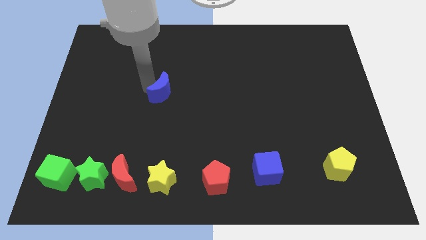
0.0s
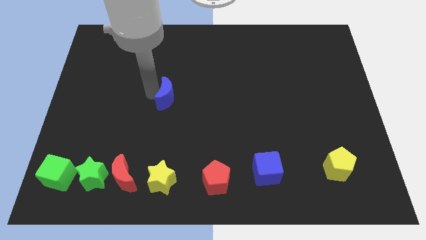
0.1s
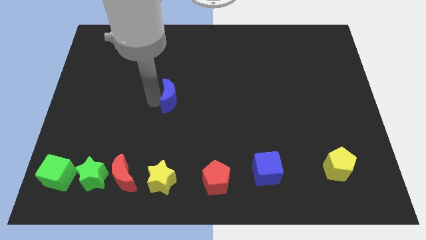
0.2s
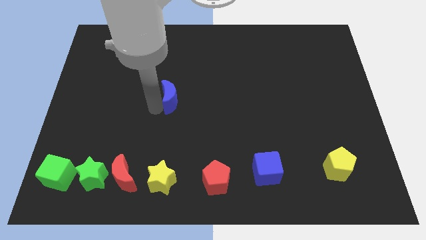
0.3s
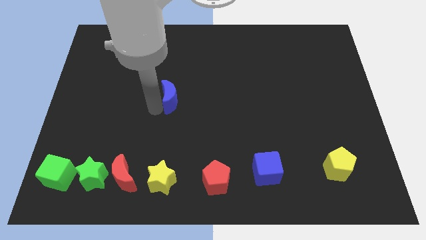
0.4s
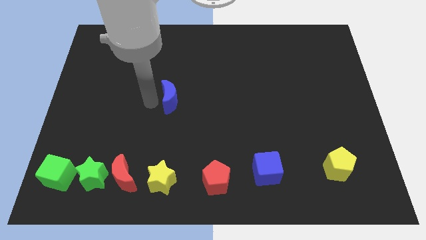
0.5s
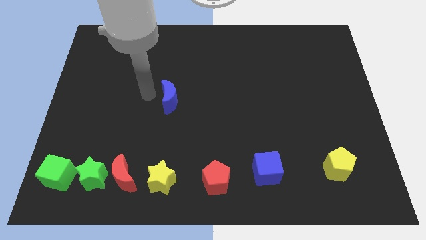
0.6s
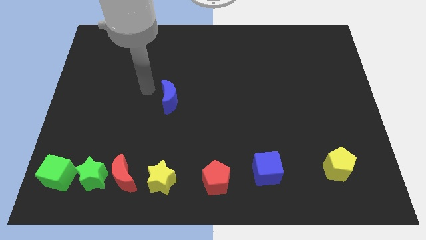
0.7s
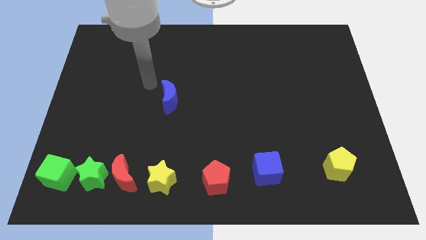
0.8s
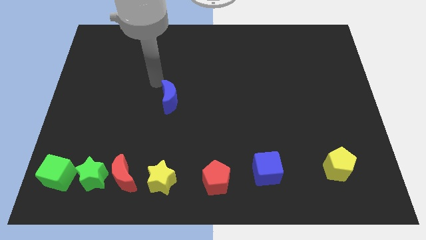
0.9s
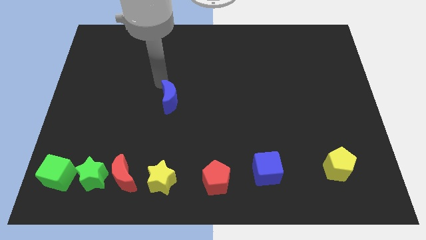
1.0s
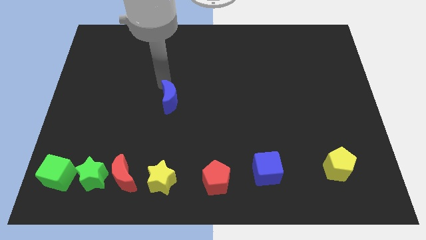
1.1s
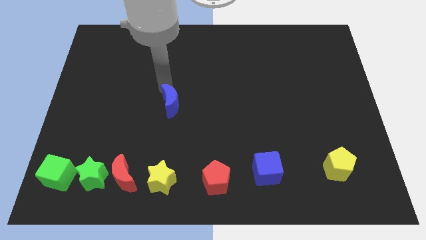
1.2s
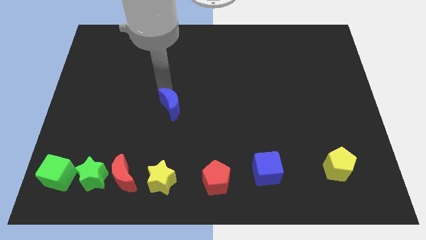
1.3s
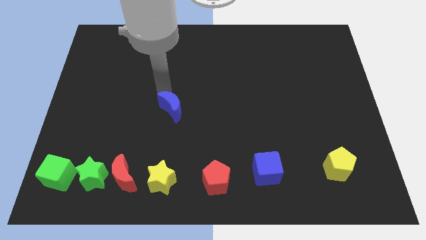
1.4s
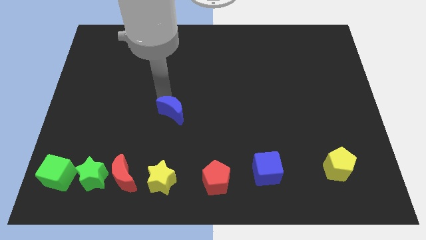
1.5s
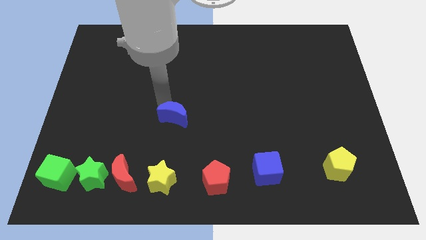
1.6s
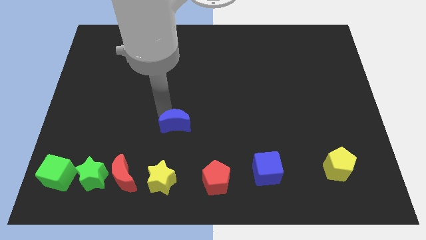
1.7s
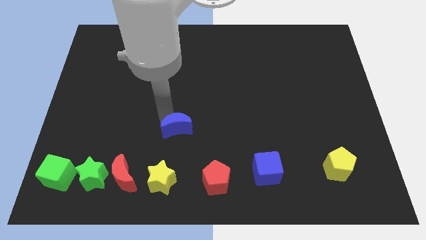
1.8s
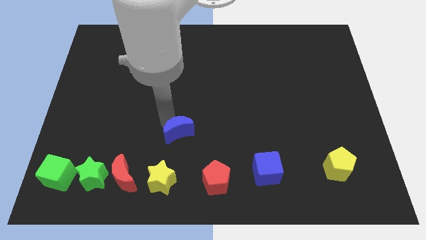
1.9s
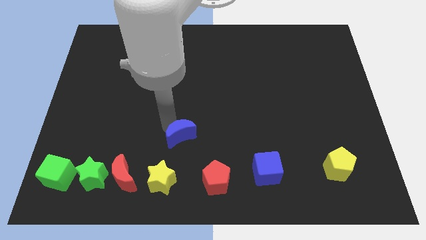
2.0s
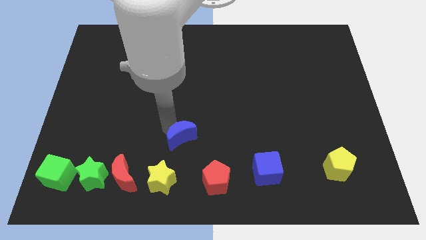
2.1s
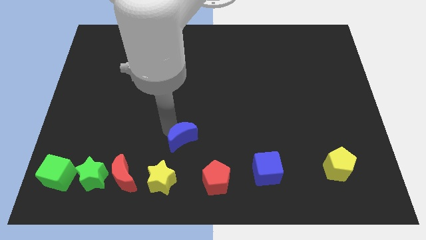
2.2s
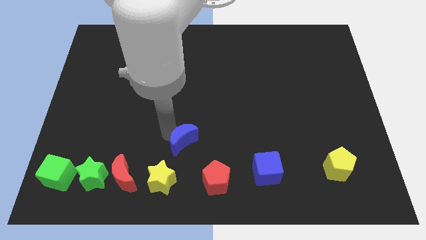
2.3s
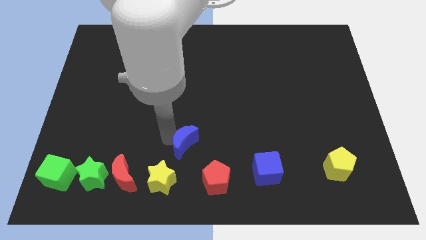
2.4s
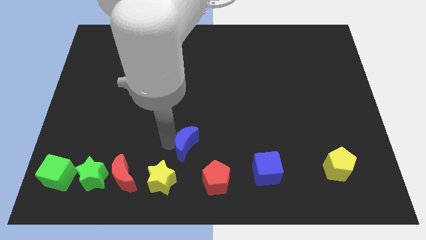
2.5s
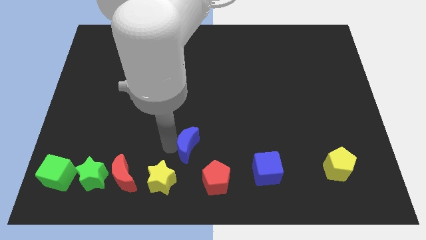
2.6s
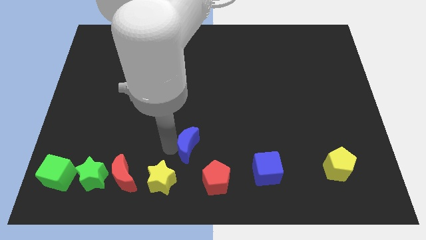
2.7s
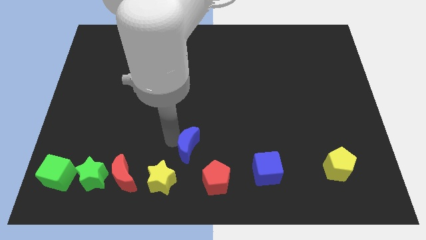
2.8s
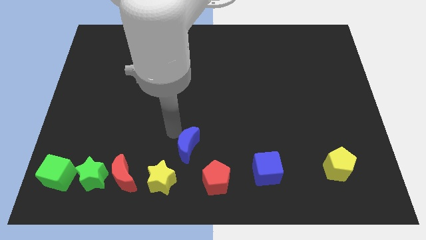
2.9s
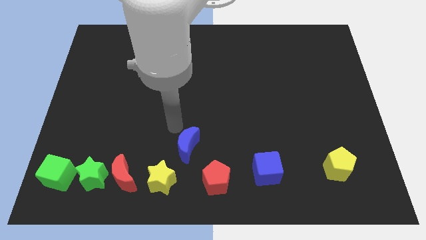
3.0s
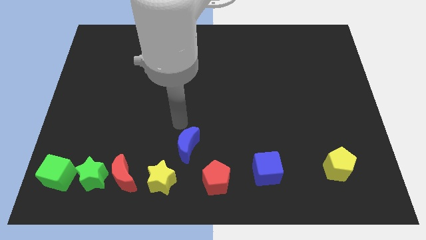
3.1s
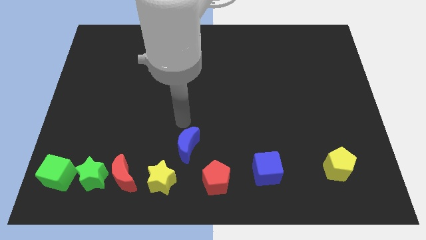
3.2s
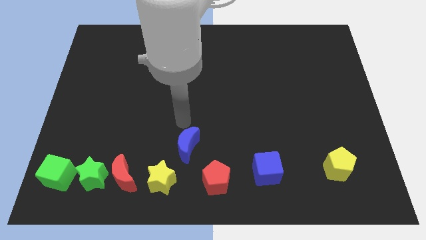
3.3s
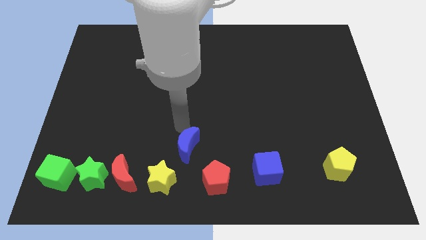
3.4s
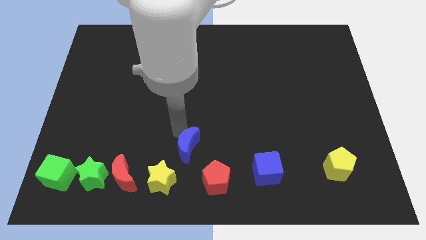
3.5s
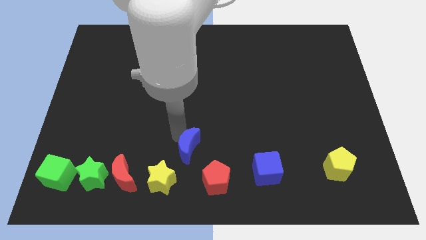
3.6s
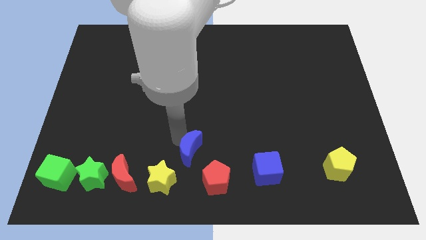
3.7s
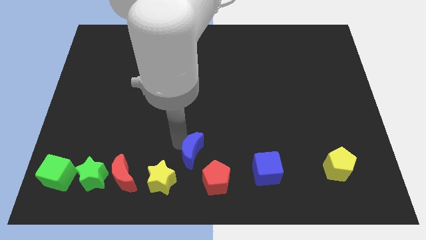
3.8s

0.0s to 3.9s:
place the blue crescent above the red pentagon

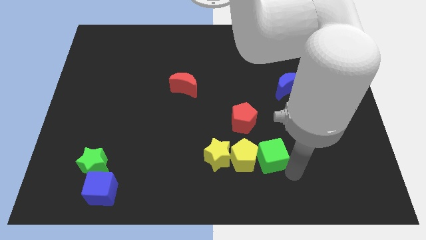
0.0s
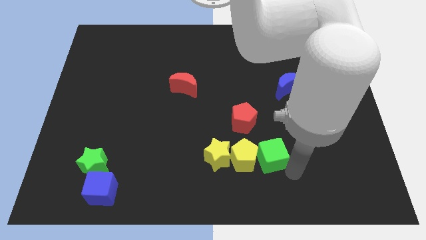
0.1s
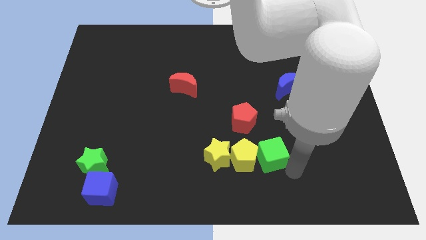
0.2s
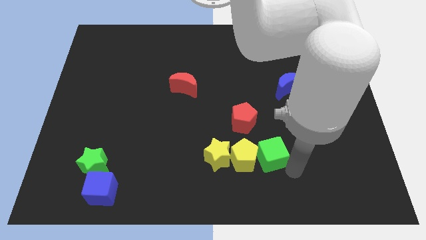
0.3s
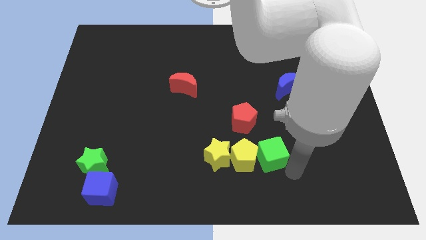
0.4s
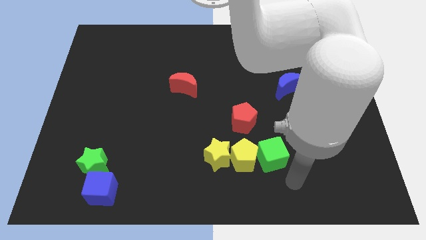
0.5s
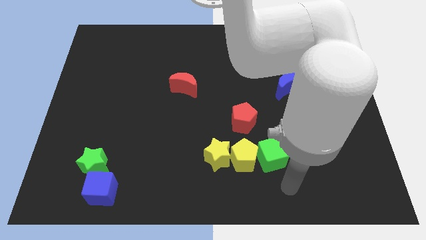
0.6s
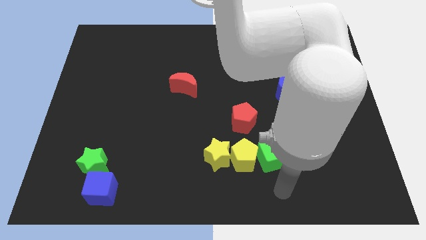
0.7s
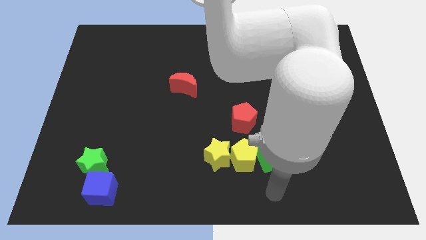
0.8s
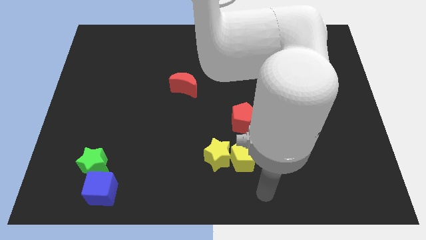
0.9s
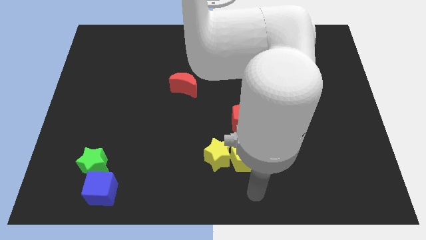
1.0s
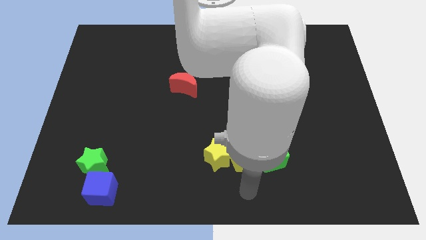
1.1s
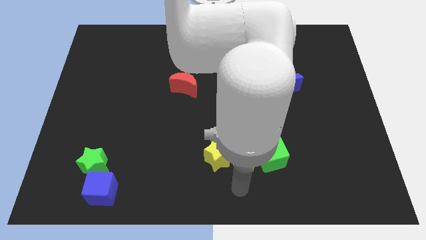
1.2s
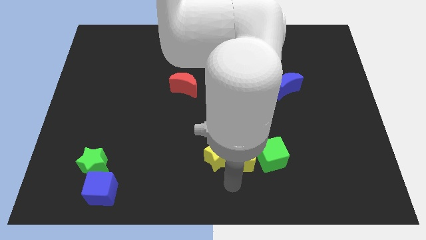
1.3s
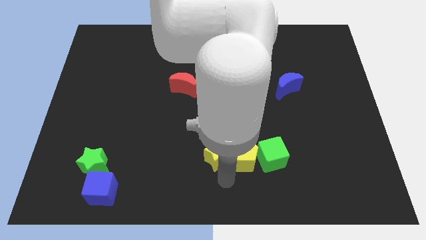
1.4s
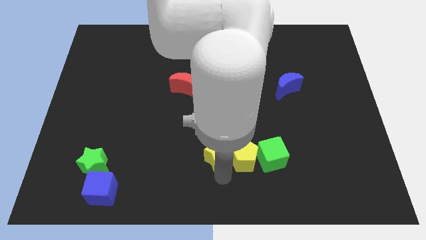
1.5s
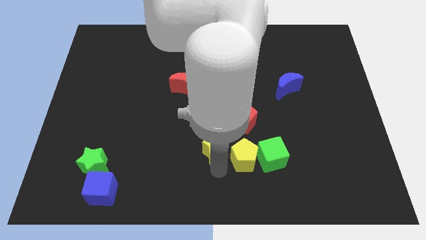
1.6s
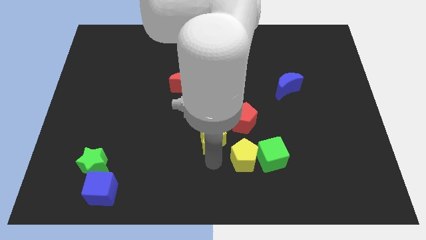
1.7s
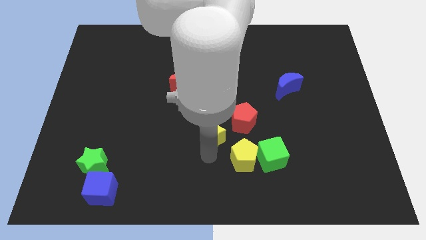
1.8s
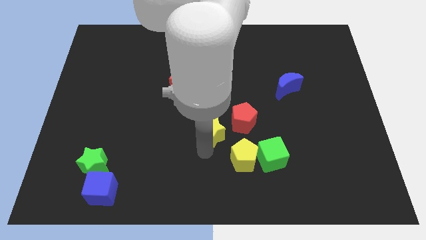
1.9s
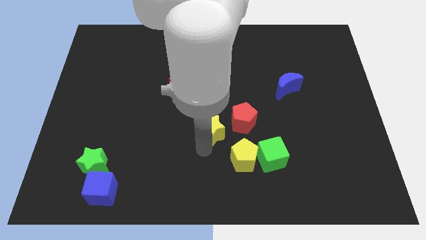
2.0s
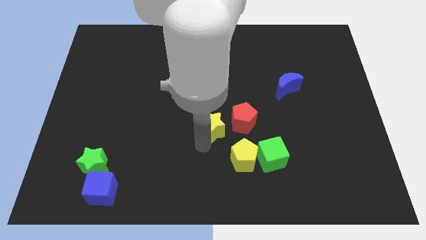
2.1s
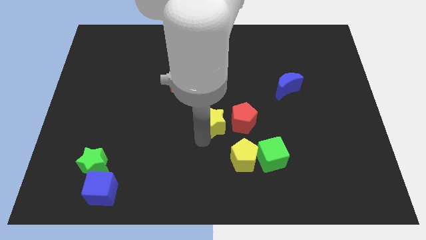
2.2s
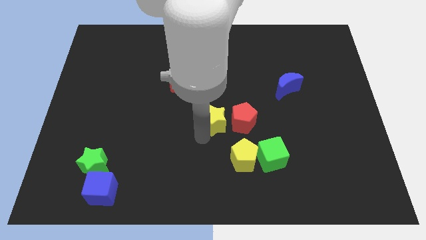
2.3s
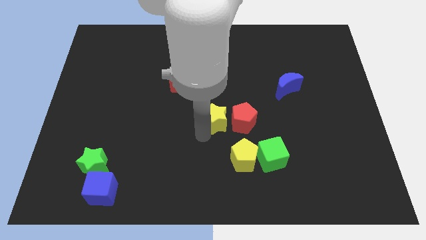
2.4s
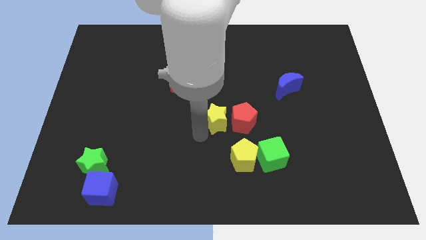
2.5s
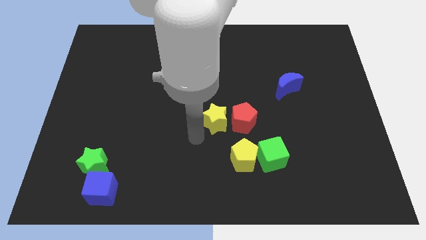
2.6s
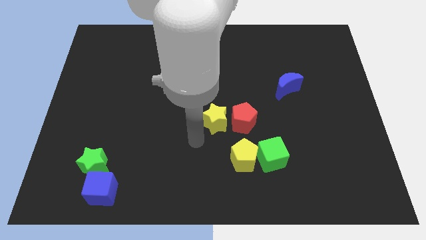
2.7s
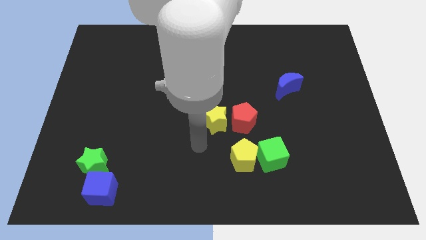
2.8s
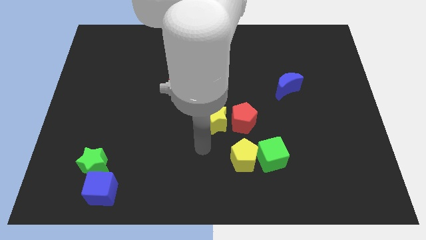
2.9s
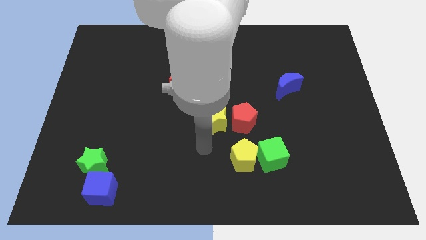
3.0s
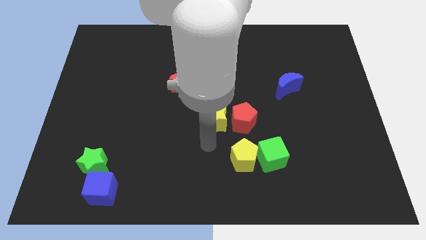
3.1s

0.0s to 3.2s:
move the yellow star to the left of the red pentagon

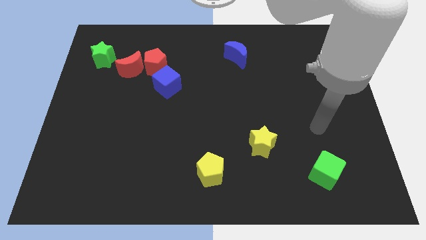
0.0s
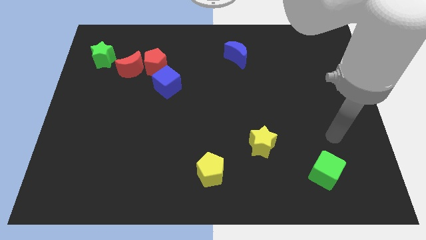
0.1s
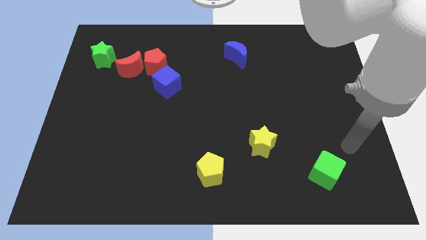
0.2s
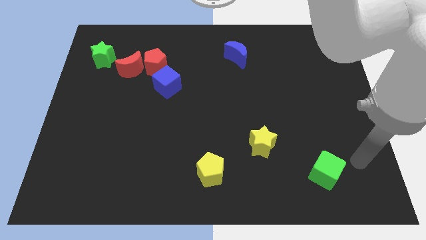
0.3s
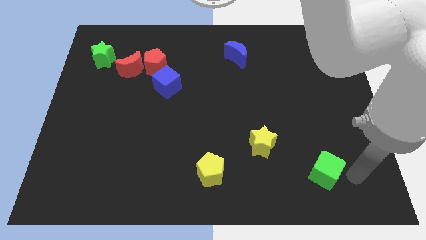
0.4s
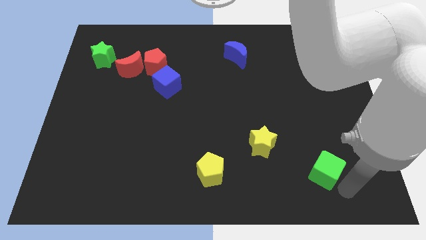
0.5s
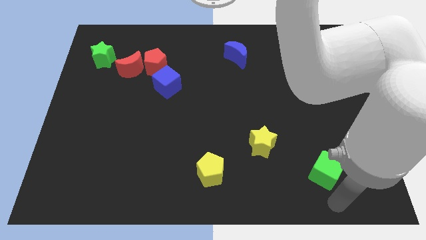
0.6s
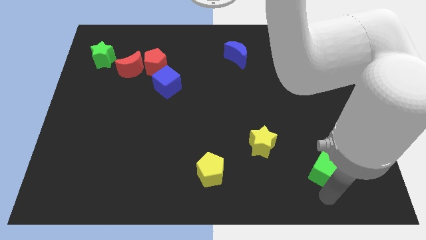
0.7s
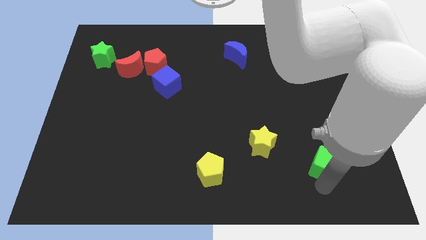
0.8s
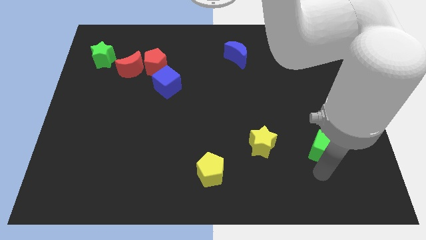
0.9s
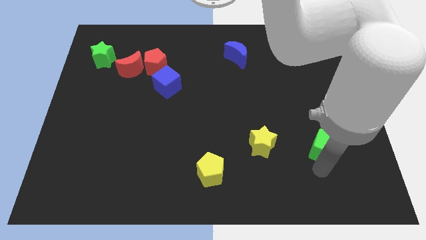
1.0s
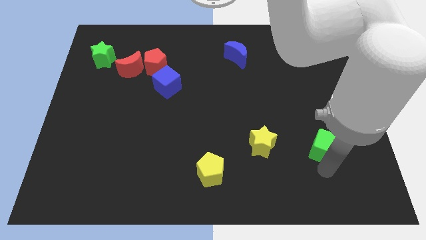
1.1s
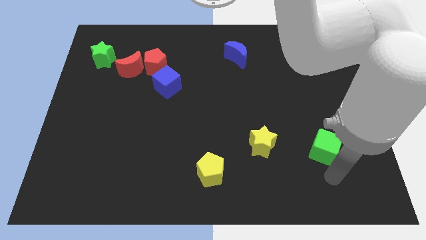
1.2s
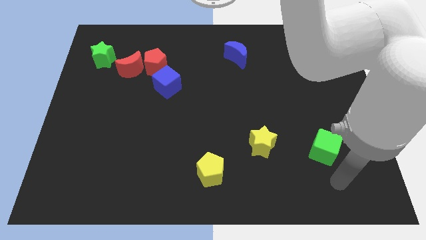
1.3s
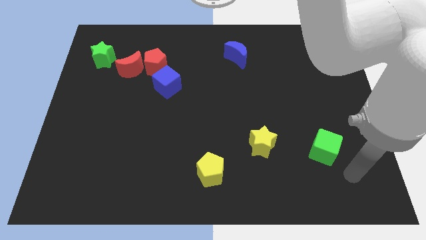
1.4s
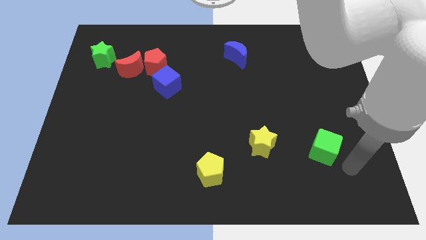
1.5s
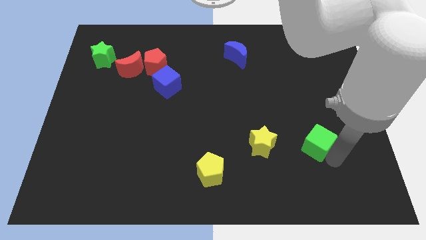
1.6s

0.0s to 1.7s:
move the green cube horizontally right to the yellow star

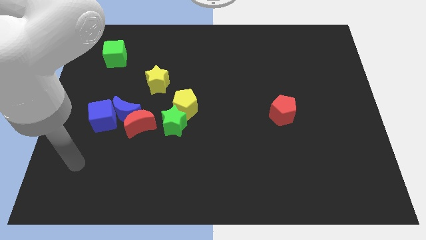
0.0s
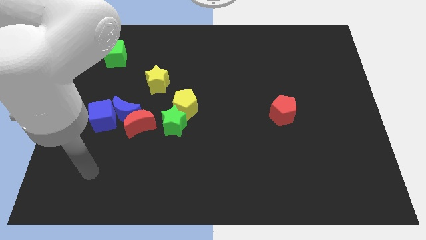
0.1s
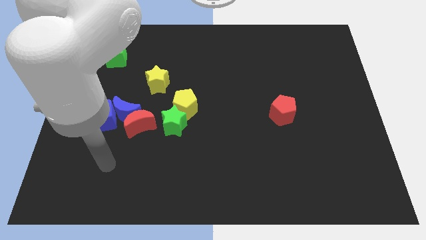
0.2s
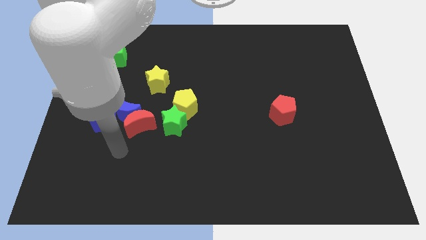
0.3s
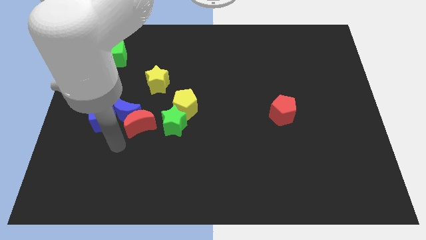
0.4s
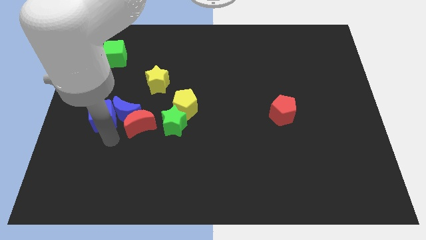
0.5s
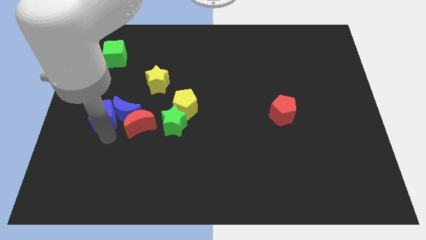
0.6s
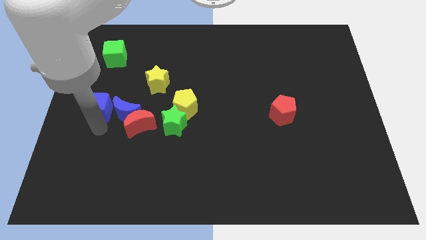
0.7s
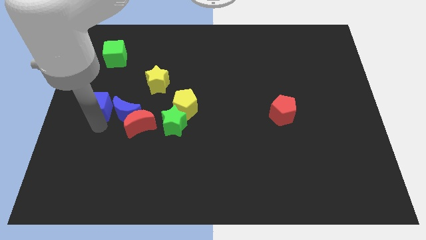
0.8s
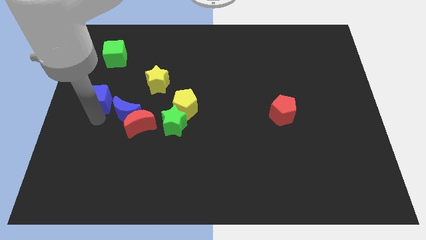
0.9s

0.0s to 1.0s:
separate blue cube from the blue moon
